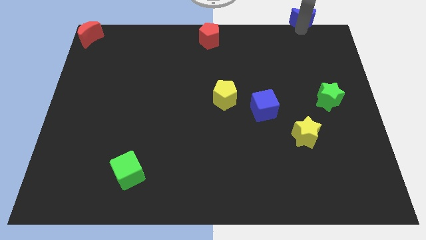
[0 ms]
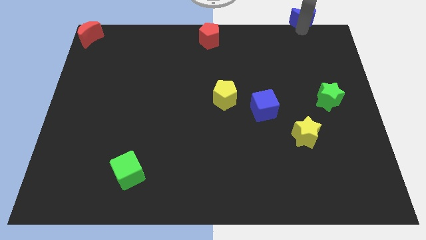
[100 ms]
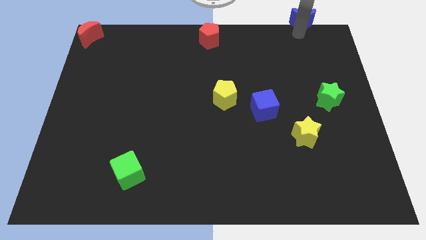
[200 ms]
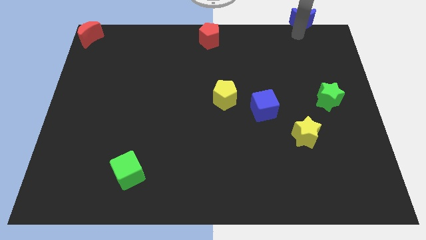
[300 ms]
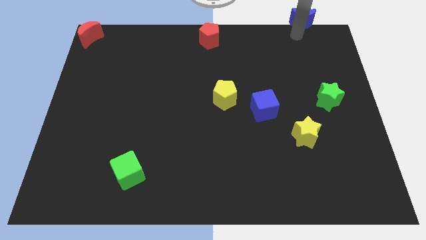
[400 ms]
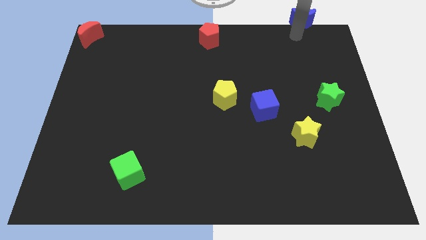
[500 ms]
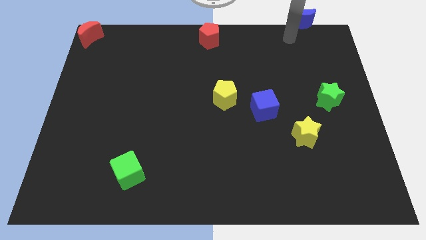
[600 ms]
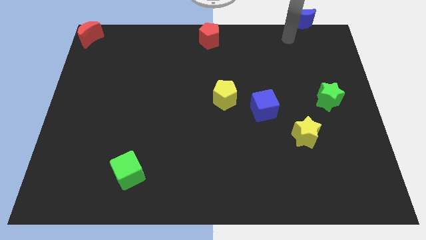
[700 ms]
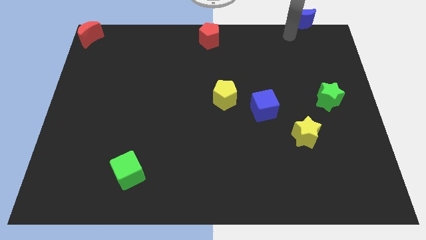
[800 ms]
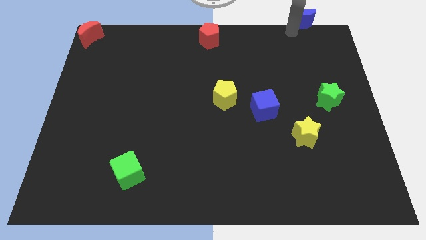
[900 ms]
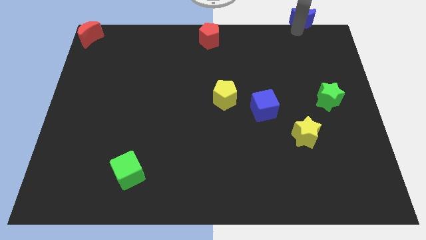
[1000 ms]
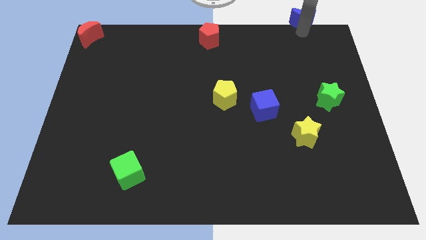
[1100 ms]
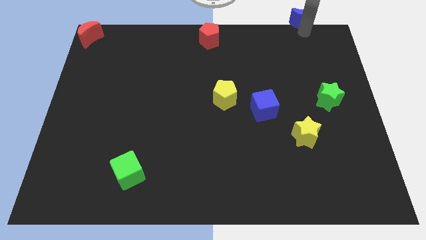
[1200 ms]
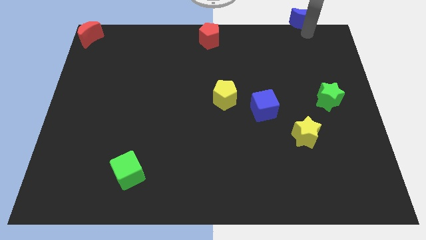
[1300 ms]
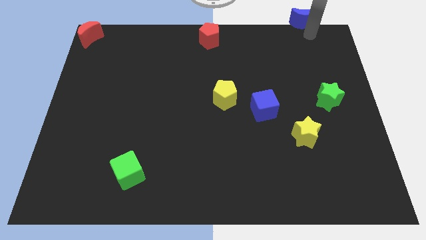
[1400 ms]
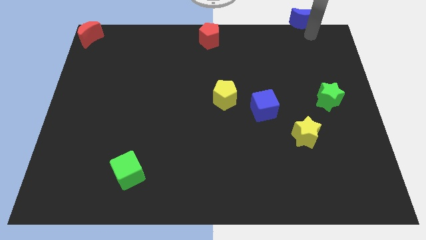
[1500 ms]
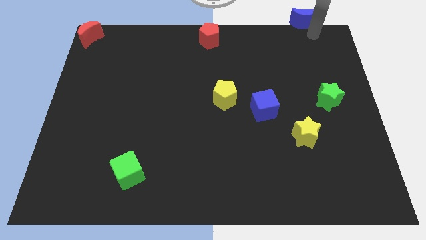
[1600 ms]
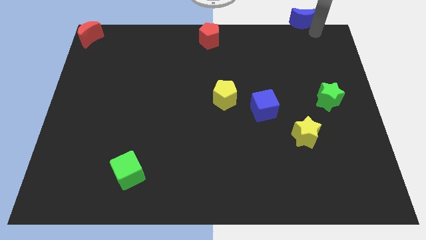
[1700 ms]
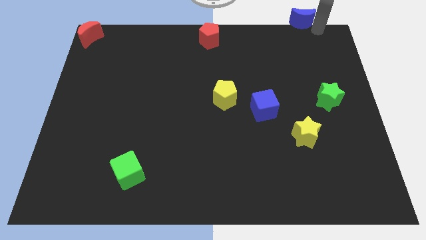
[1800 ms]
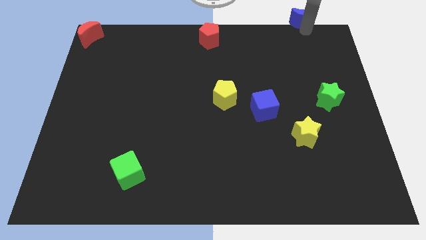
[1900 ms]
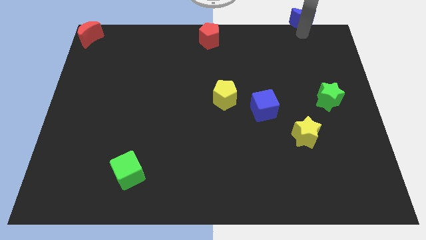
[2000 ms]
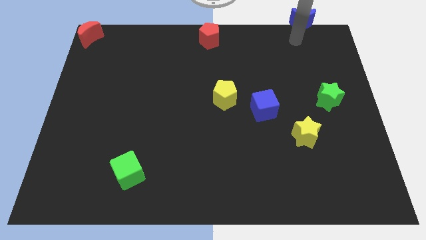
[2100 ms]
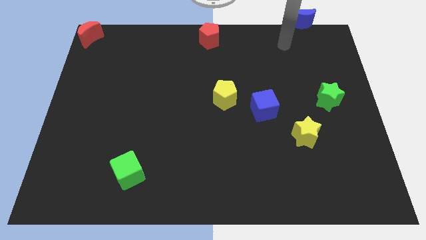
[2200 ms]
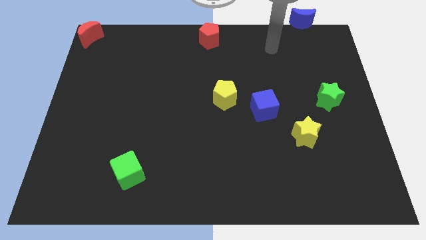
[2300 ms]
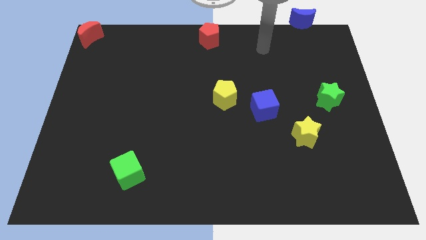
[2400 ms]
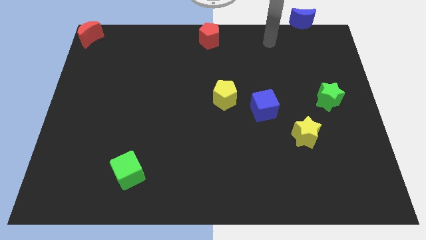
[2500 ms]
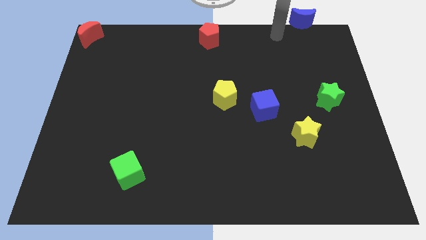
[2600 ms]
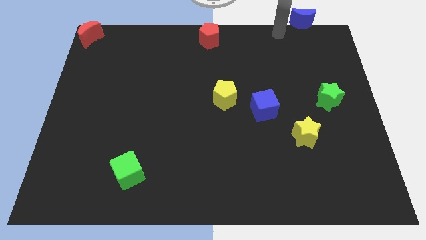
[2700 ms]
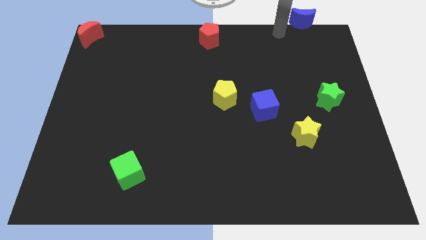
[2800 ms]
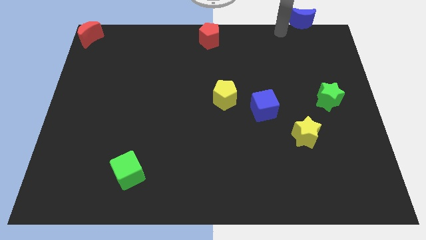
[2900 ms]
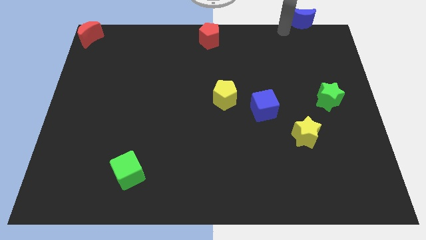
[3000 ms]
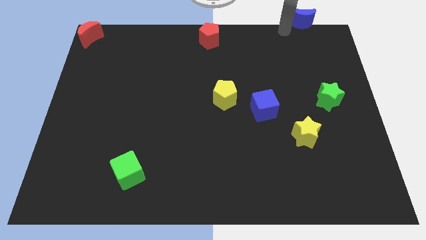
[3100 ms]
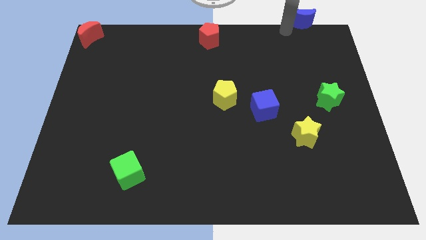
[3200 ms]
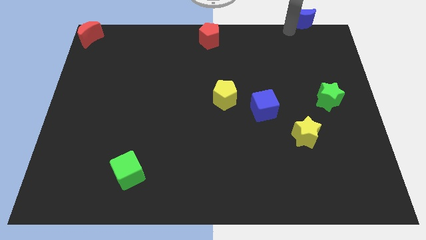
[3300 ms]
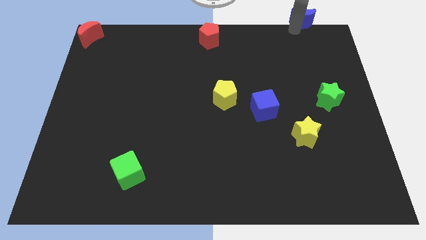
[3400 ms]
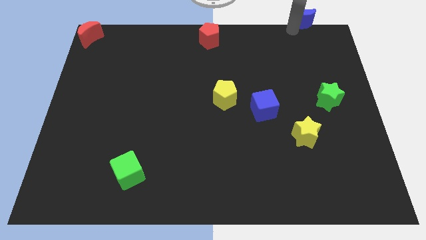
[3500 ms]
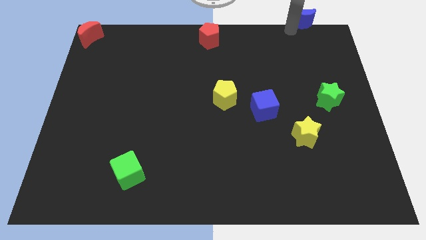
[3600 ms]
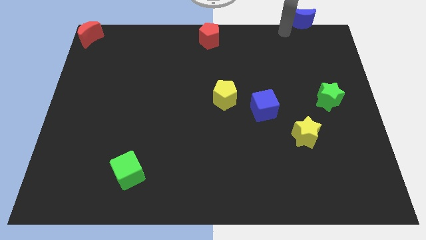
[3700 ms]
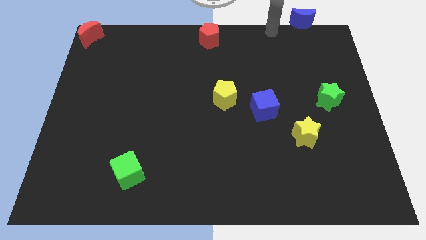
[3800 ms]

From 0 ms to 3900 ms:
point the arm to the left bottom side of the blue moon

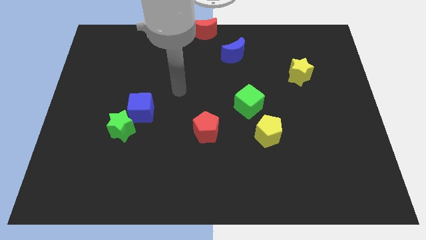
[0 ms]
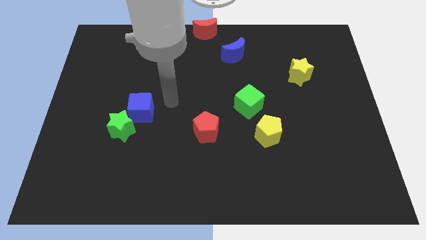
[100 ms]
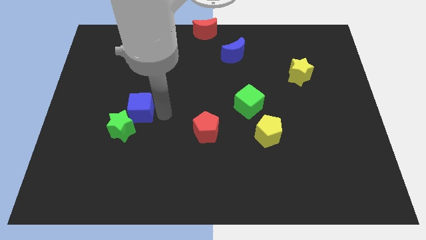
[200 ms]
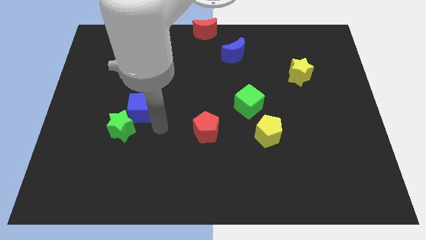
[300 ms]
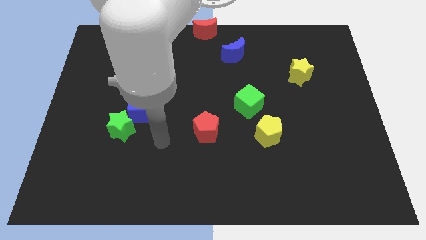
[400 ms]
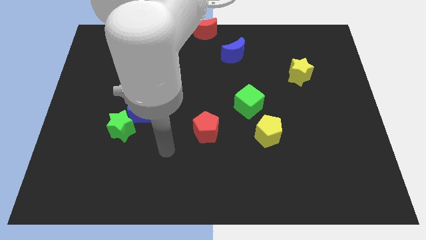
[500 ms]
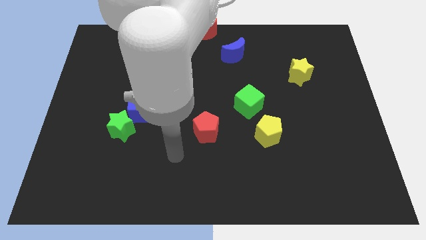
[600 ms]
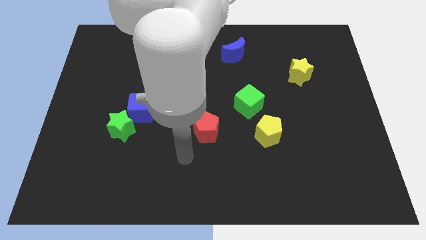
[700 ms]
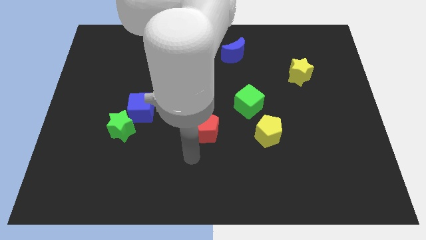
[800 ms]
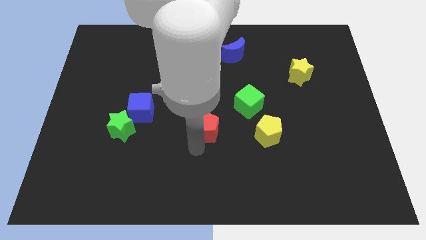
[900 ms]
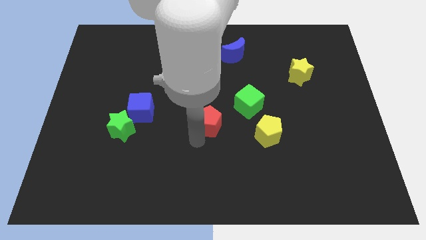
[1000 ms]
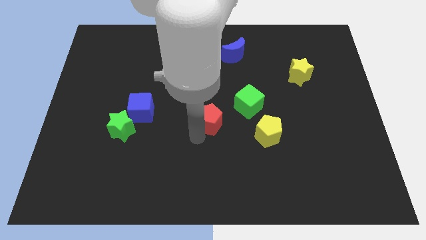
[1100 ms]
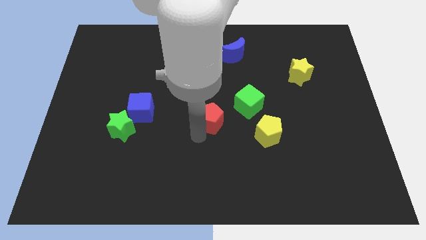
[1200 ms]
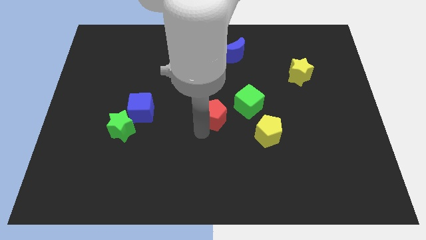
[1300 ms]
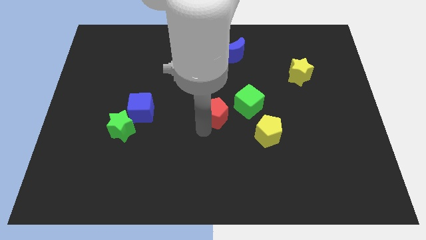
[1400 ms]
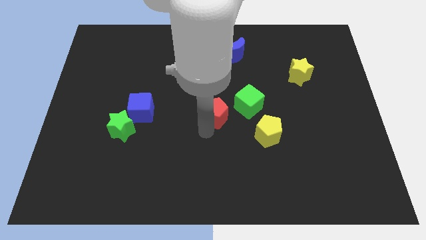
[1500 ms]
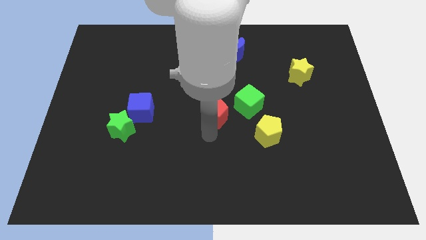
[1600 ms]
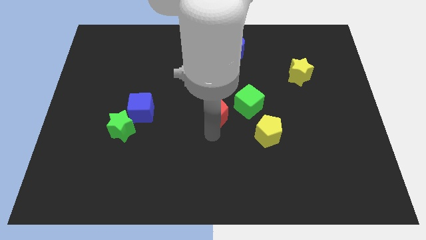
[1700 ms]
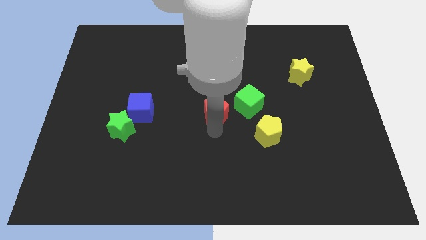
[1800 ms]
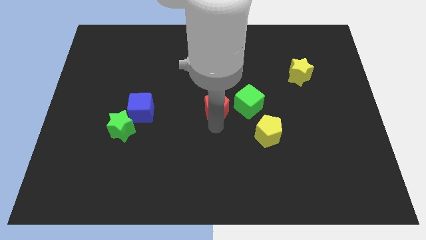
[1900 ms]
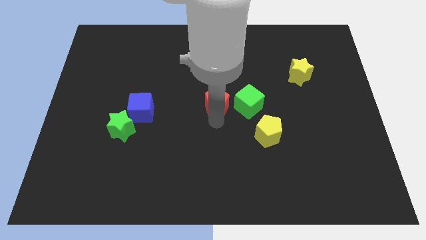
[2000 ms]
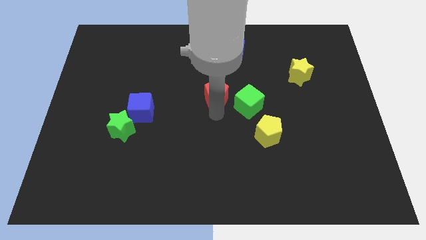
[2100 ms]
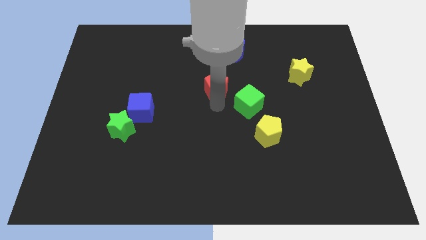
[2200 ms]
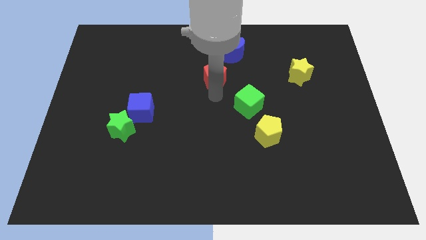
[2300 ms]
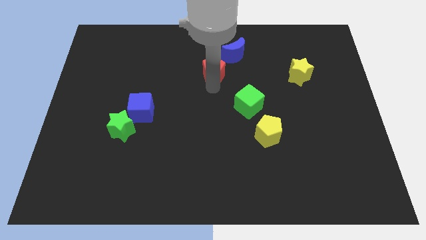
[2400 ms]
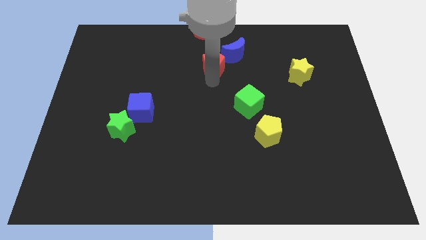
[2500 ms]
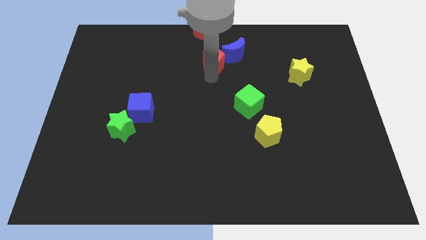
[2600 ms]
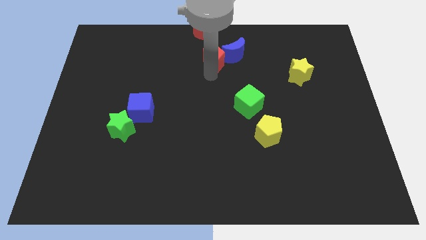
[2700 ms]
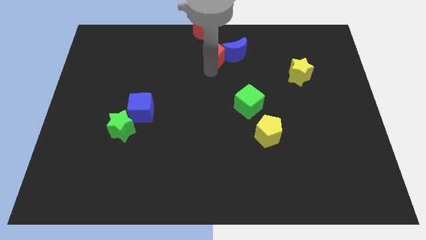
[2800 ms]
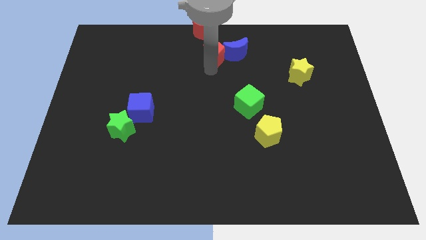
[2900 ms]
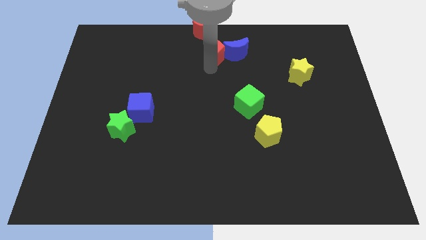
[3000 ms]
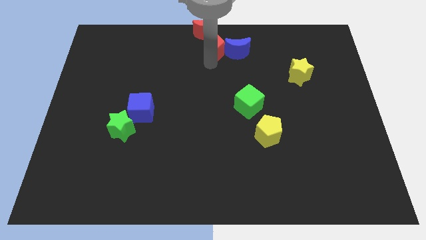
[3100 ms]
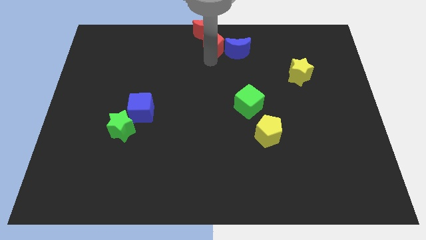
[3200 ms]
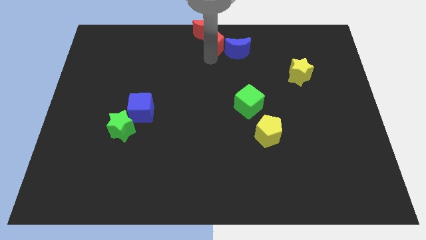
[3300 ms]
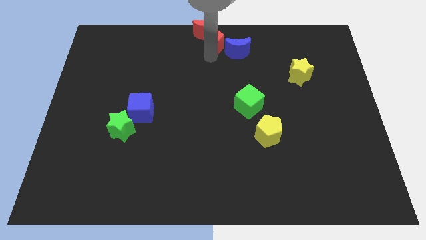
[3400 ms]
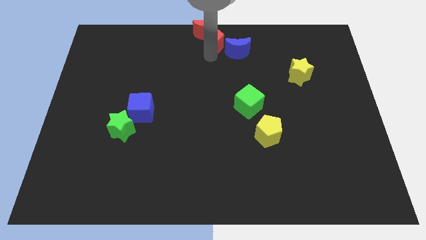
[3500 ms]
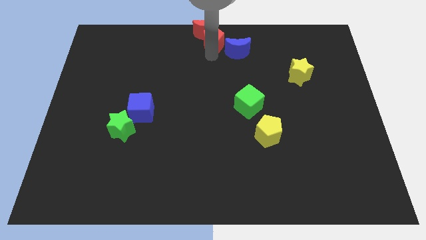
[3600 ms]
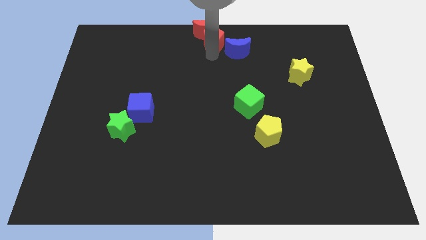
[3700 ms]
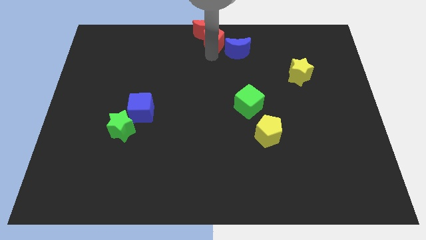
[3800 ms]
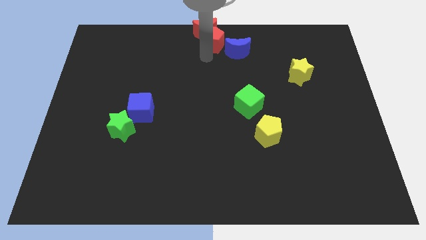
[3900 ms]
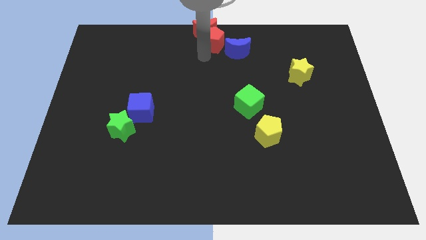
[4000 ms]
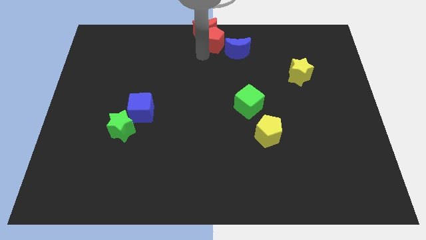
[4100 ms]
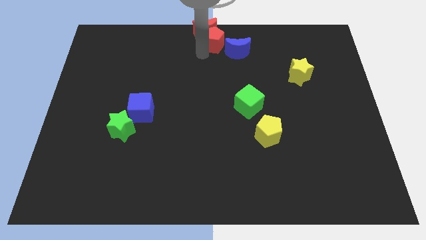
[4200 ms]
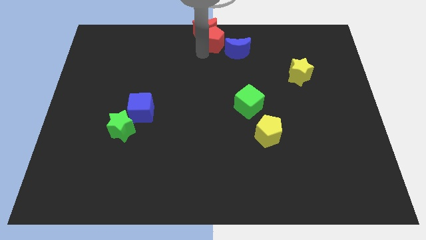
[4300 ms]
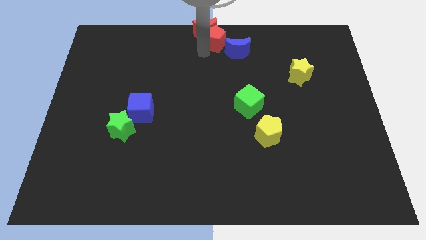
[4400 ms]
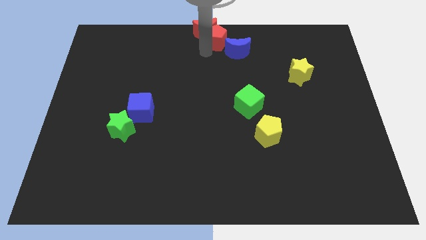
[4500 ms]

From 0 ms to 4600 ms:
place the red pentagon between the blue moon and red moon

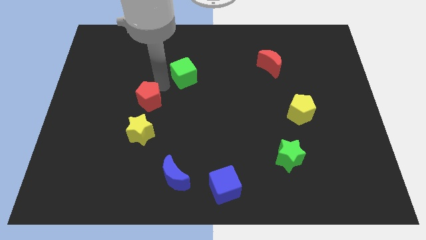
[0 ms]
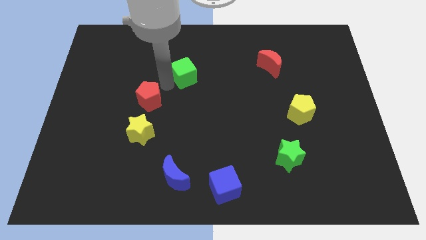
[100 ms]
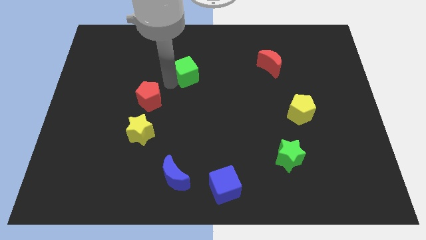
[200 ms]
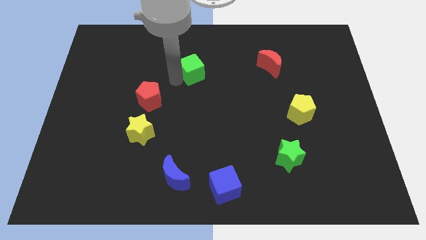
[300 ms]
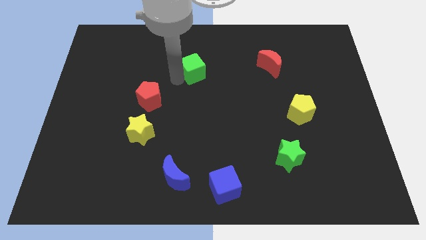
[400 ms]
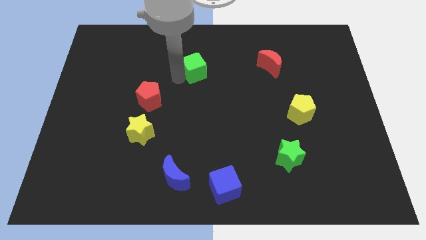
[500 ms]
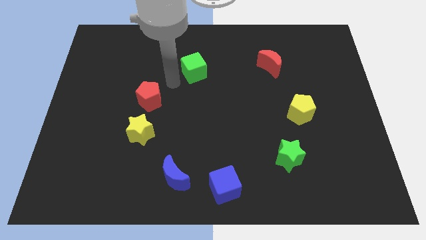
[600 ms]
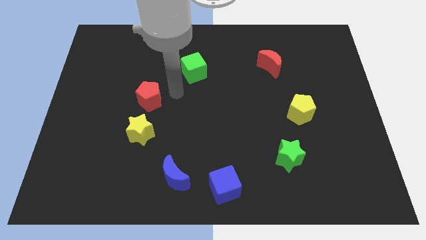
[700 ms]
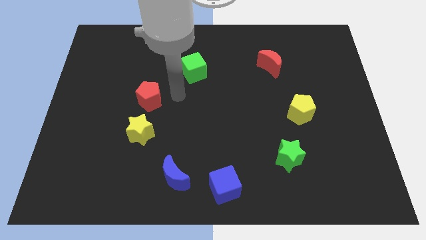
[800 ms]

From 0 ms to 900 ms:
push the green cube towards the top center of the board
